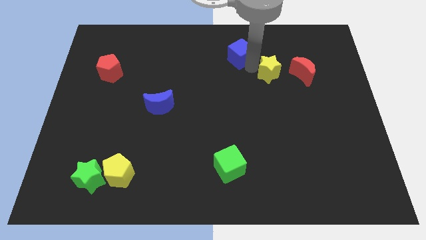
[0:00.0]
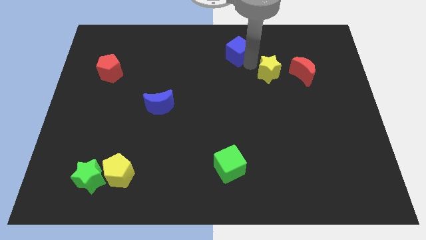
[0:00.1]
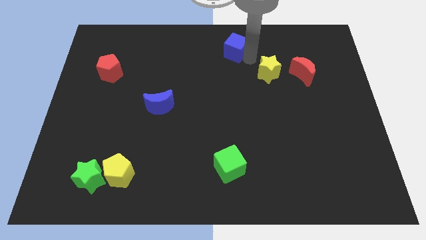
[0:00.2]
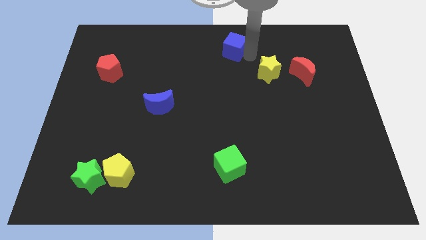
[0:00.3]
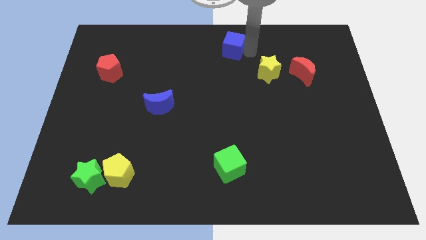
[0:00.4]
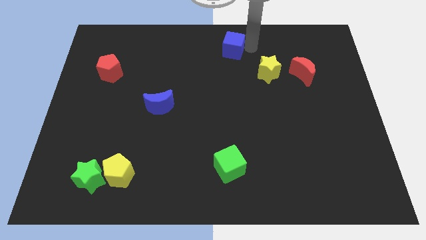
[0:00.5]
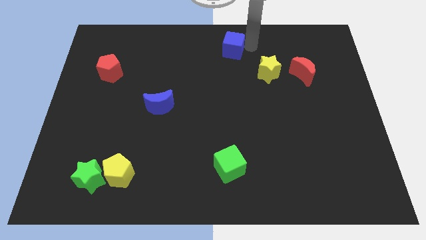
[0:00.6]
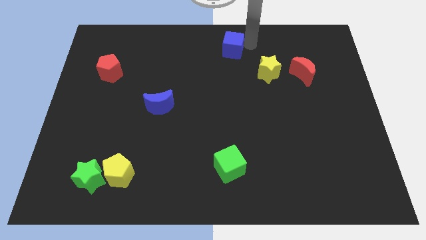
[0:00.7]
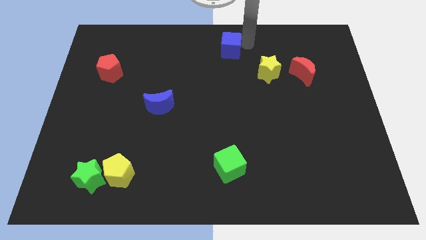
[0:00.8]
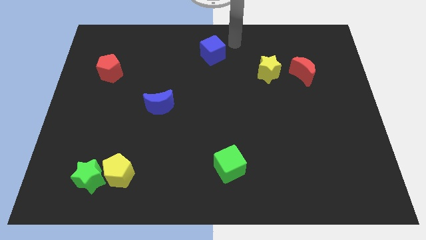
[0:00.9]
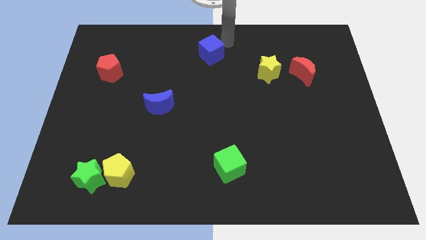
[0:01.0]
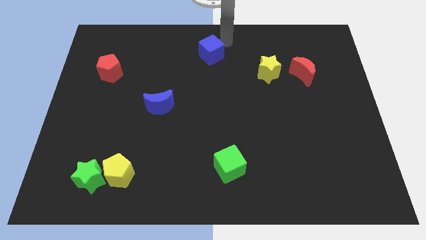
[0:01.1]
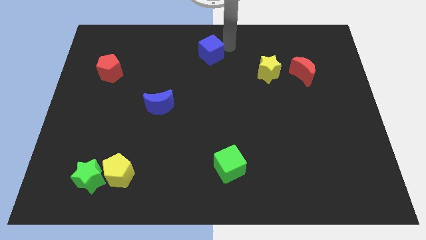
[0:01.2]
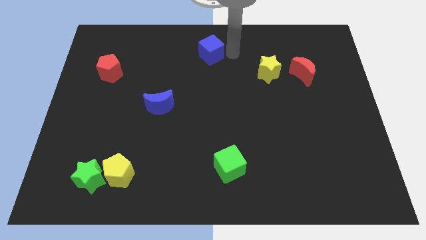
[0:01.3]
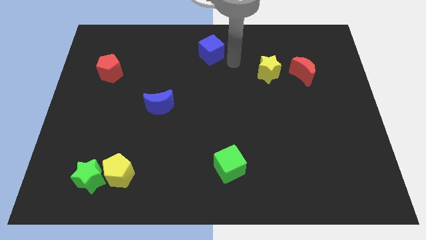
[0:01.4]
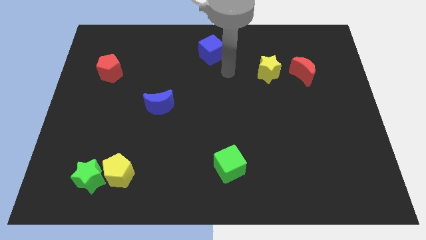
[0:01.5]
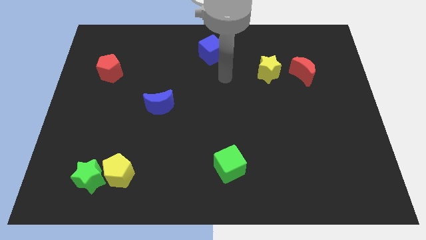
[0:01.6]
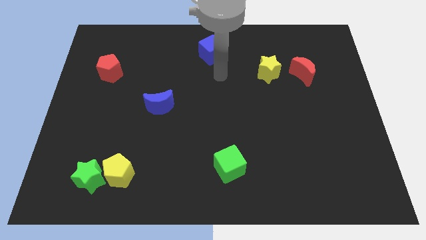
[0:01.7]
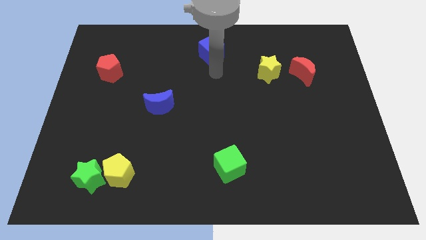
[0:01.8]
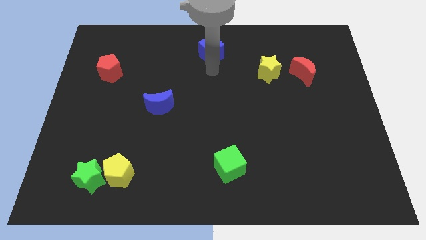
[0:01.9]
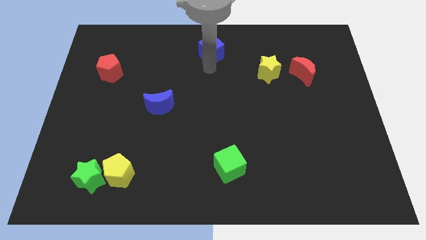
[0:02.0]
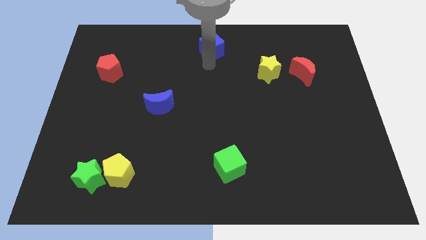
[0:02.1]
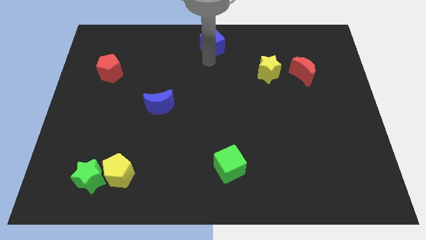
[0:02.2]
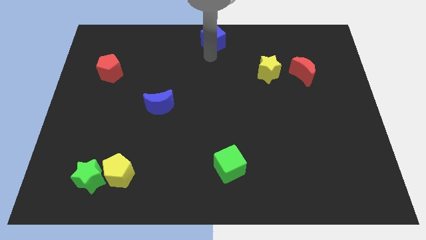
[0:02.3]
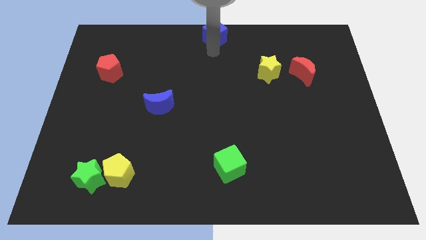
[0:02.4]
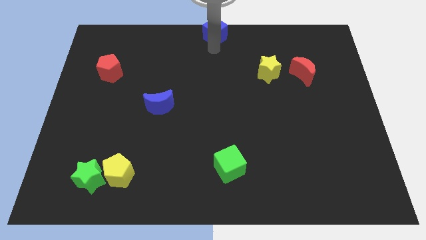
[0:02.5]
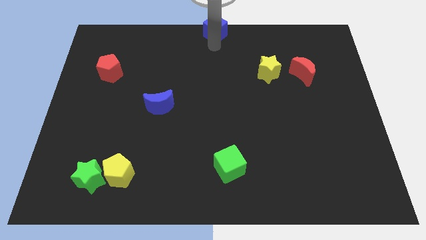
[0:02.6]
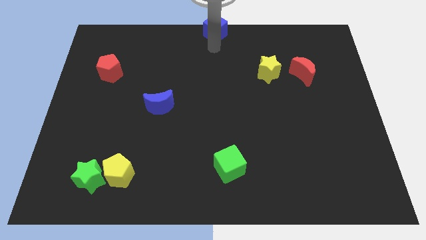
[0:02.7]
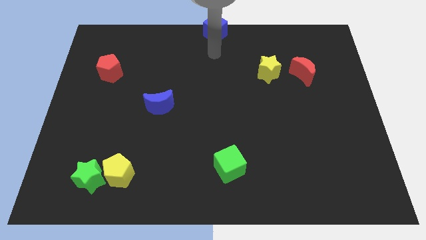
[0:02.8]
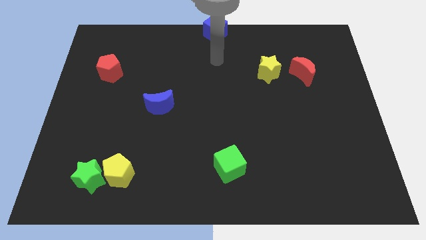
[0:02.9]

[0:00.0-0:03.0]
move the blue cube to the top center of the board

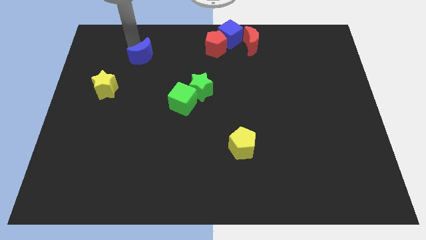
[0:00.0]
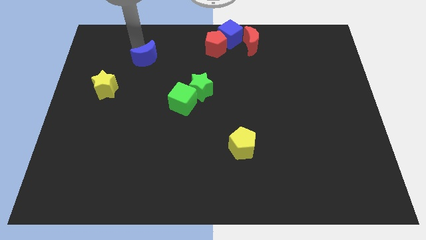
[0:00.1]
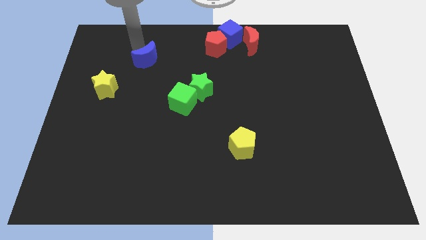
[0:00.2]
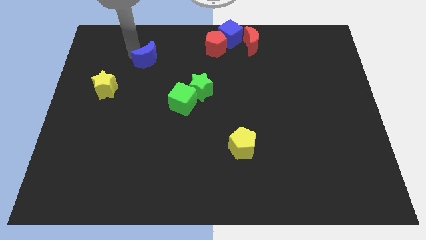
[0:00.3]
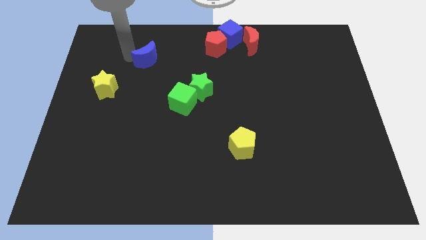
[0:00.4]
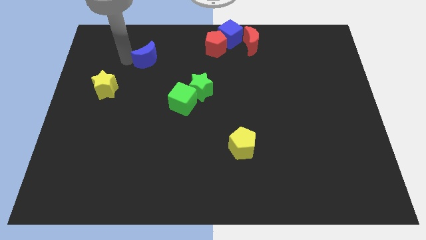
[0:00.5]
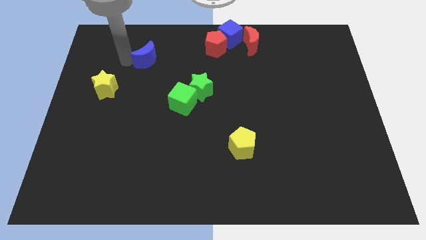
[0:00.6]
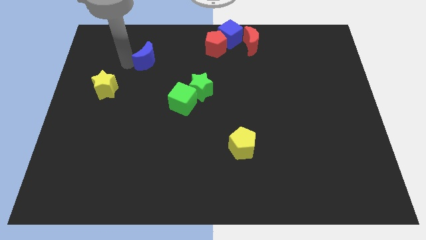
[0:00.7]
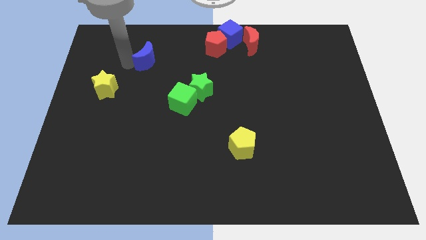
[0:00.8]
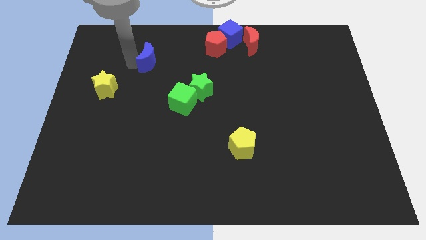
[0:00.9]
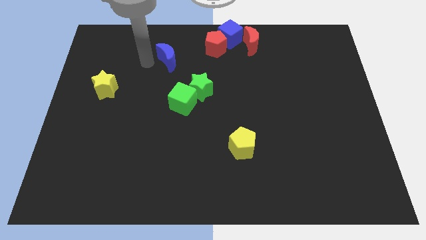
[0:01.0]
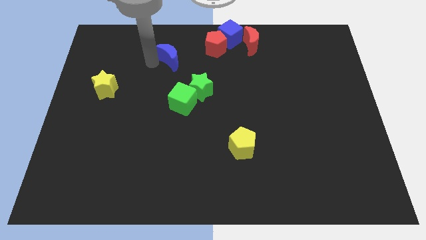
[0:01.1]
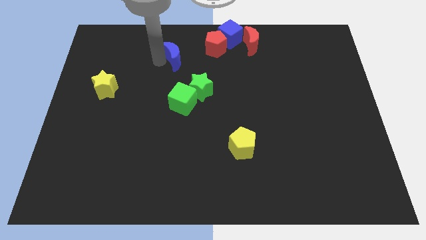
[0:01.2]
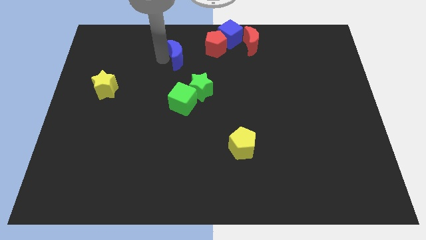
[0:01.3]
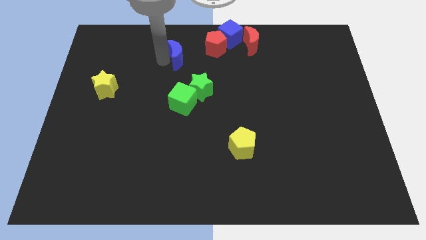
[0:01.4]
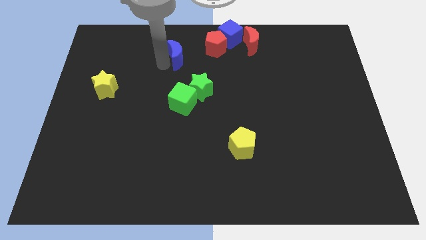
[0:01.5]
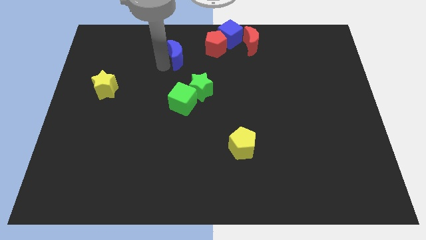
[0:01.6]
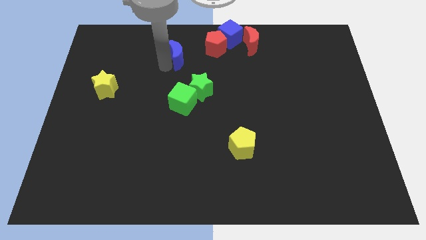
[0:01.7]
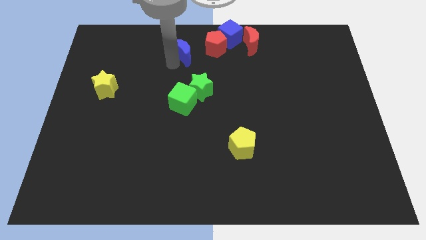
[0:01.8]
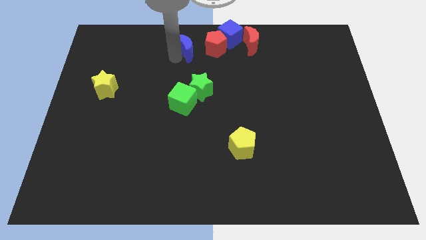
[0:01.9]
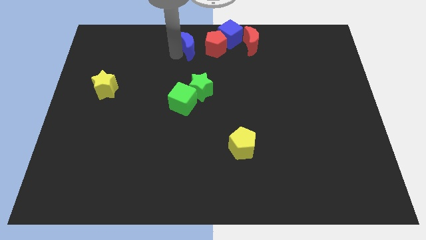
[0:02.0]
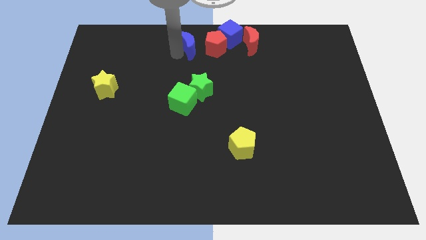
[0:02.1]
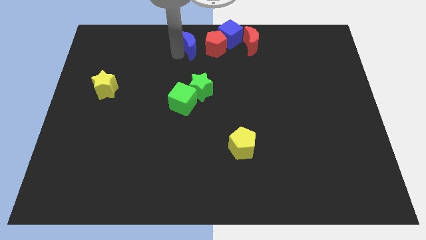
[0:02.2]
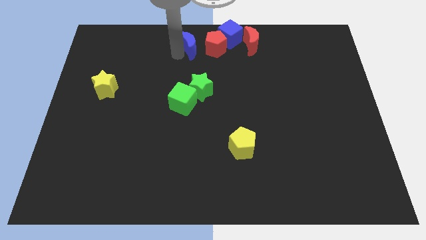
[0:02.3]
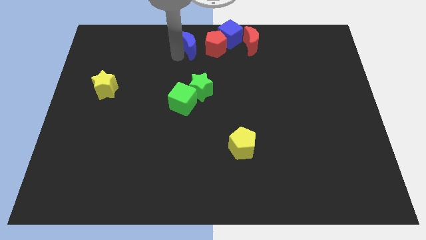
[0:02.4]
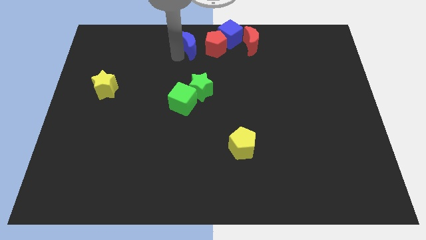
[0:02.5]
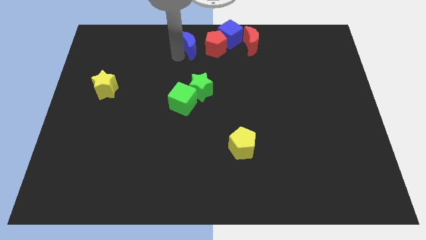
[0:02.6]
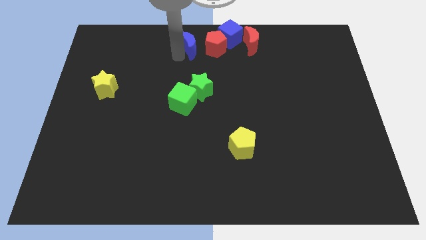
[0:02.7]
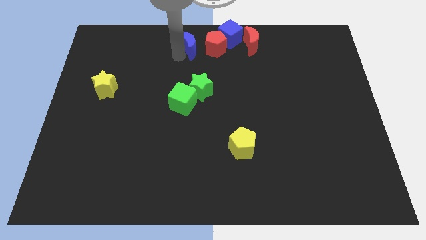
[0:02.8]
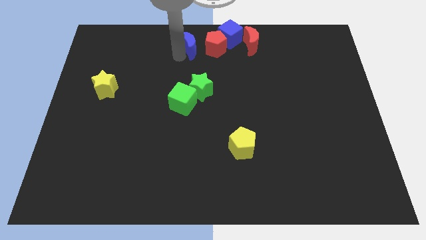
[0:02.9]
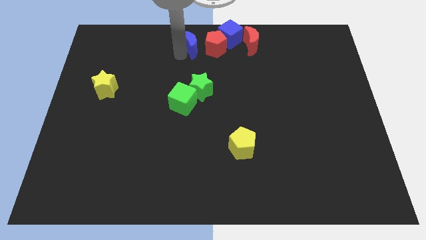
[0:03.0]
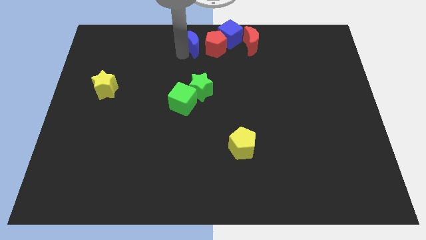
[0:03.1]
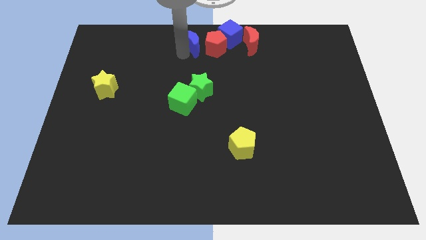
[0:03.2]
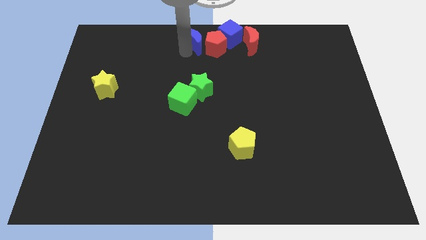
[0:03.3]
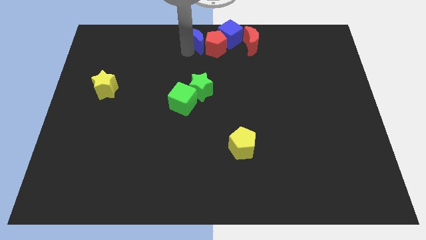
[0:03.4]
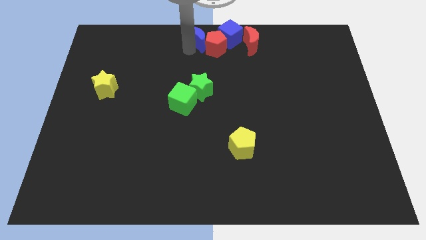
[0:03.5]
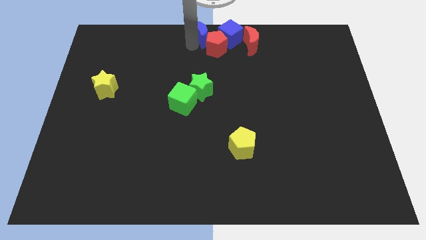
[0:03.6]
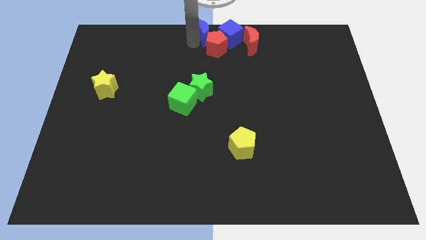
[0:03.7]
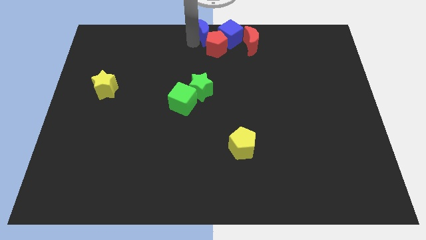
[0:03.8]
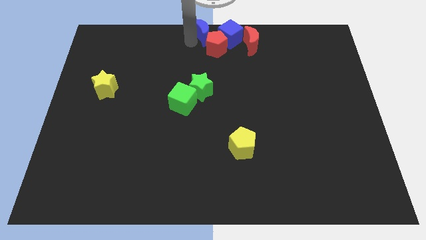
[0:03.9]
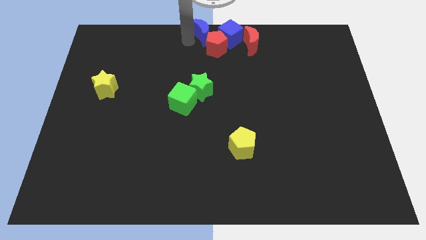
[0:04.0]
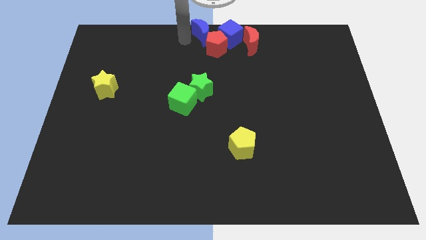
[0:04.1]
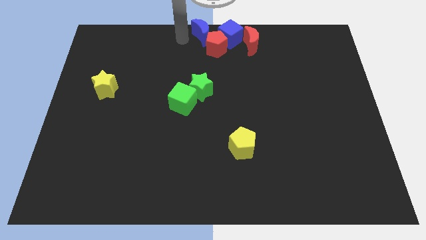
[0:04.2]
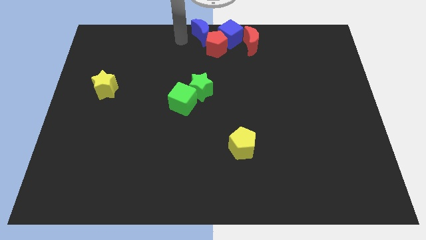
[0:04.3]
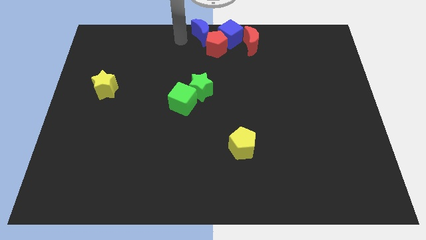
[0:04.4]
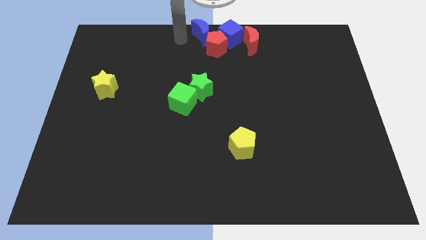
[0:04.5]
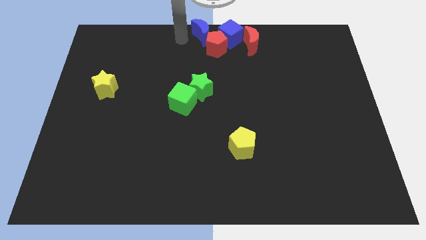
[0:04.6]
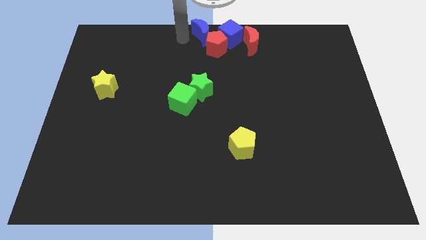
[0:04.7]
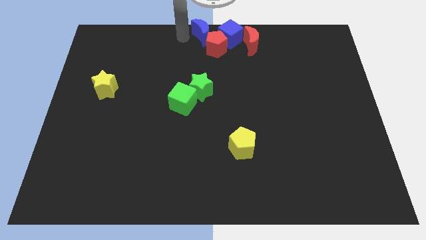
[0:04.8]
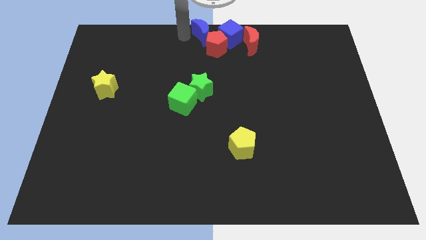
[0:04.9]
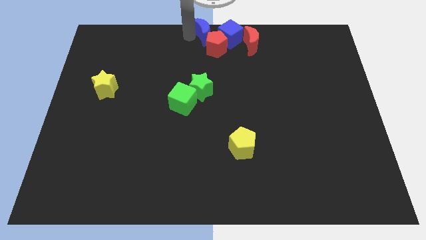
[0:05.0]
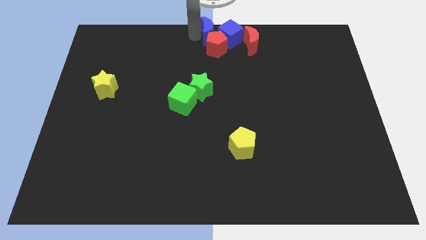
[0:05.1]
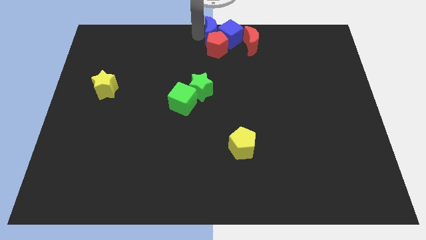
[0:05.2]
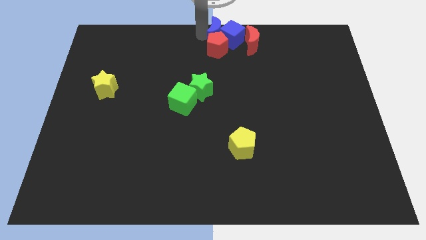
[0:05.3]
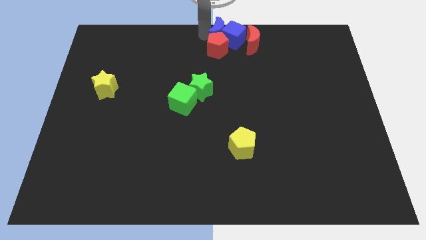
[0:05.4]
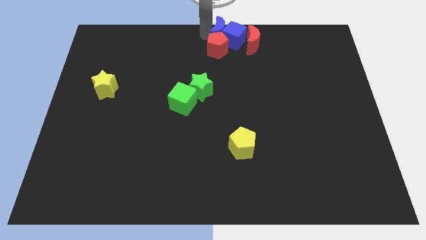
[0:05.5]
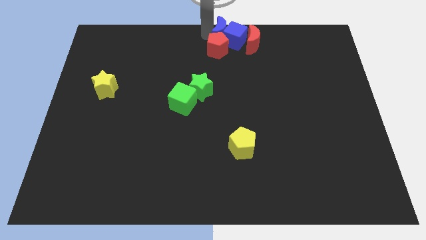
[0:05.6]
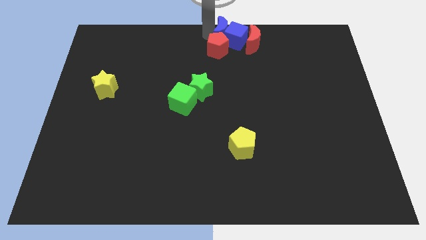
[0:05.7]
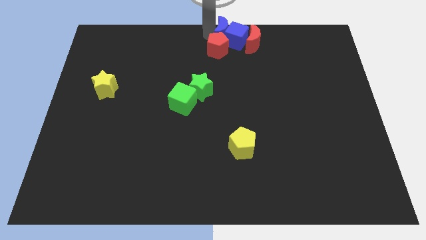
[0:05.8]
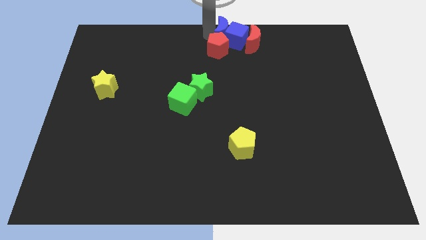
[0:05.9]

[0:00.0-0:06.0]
push the blue crescent into the blue cube
